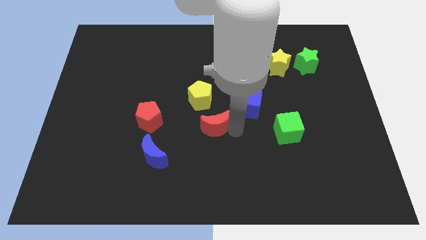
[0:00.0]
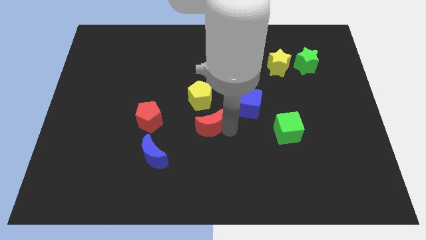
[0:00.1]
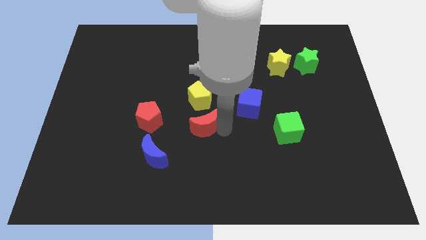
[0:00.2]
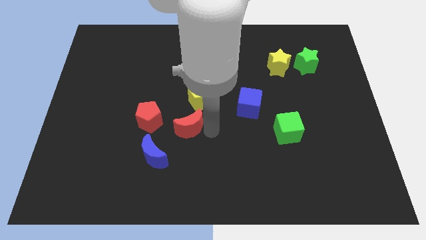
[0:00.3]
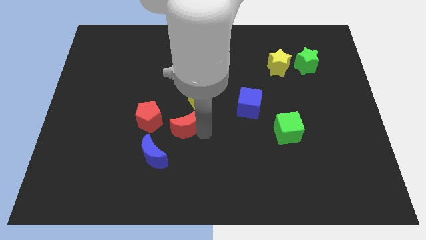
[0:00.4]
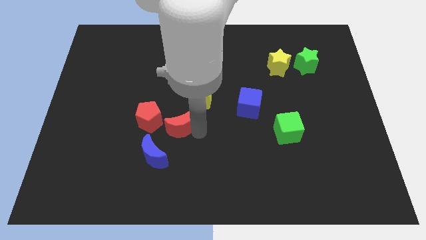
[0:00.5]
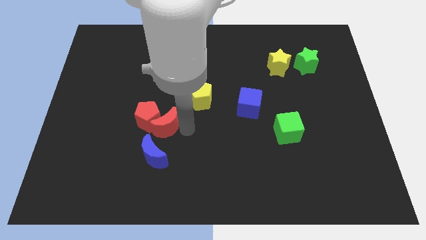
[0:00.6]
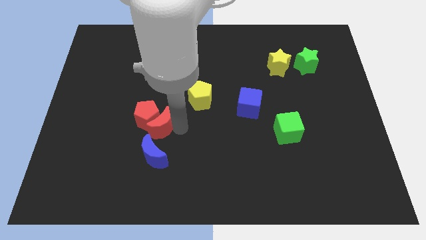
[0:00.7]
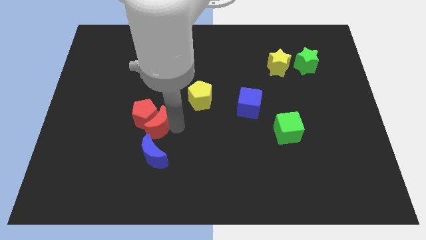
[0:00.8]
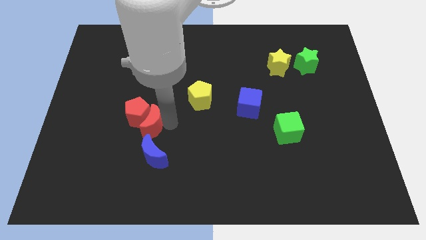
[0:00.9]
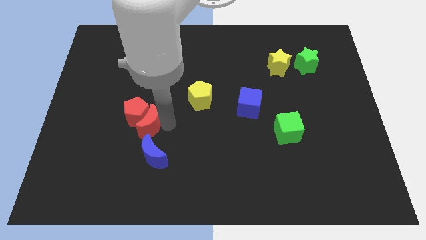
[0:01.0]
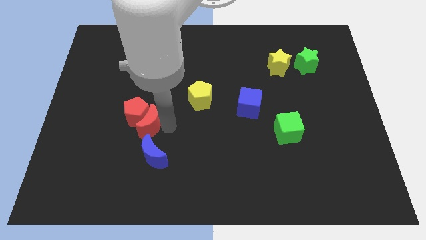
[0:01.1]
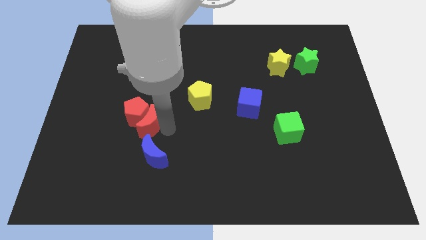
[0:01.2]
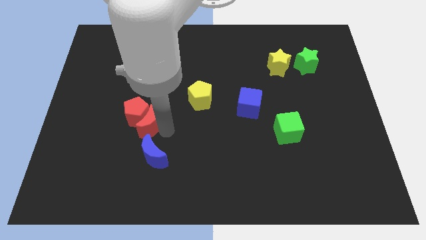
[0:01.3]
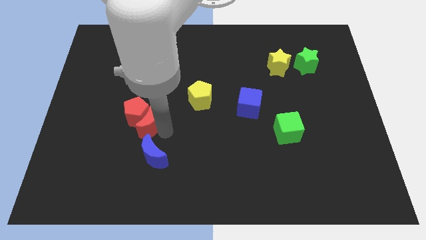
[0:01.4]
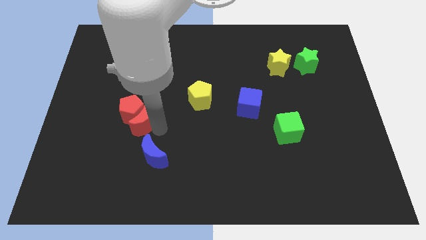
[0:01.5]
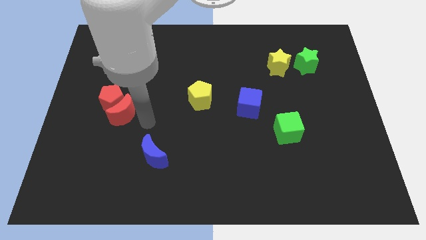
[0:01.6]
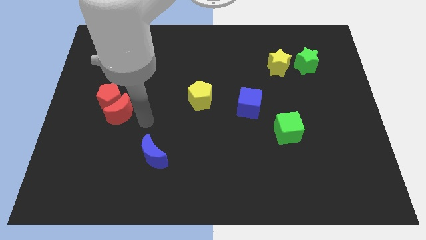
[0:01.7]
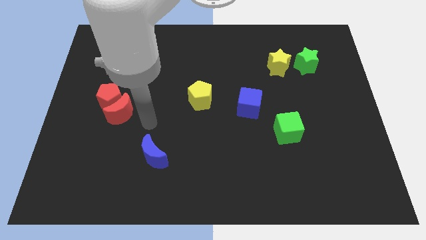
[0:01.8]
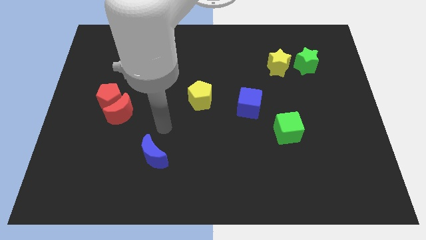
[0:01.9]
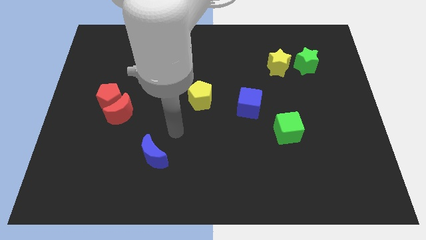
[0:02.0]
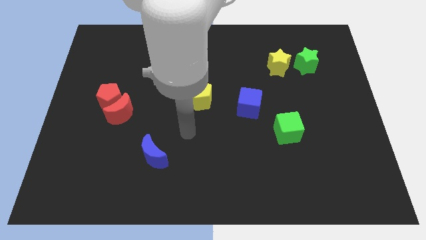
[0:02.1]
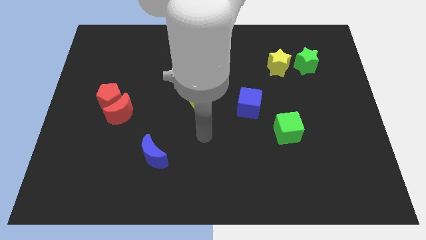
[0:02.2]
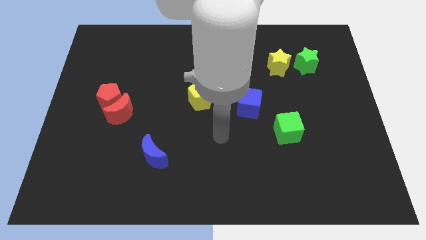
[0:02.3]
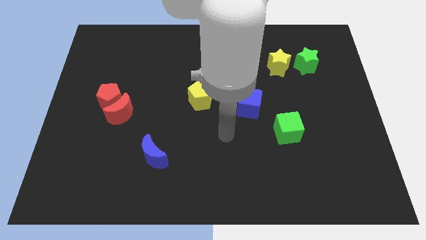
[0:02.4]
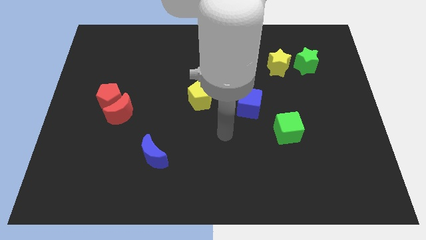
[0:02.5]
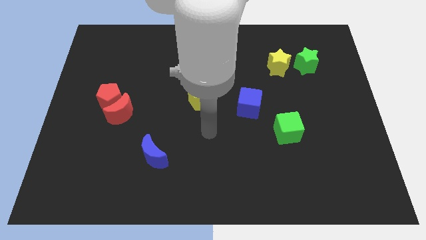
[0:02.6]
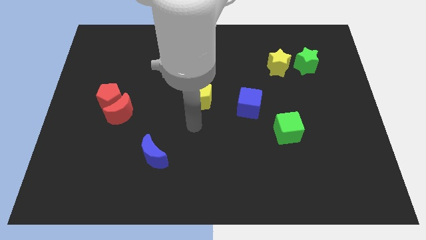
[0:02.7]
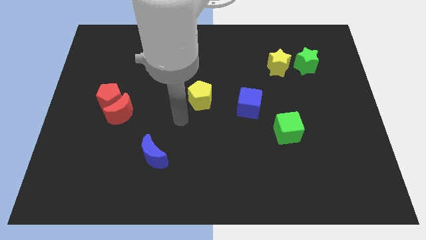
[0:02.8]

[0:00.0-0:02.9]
slide red moon and red pentagon to the left side of the board

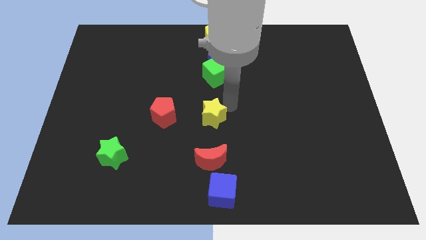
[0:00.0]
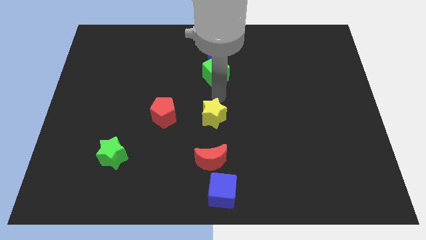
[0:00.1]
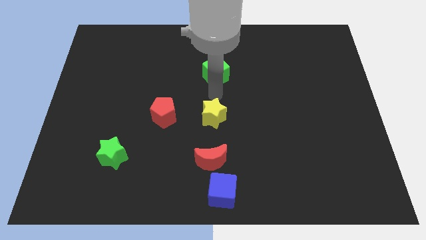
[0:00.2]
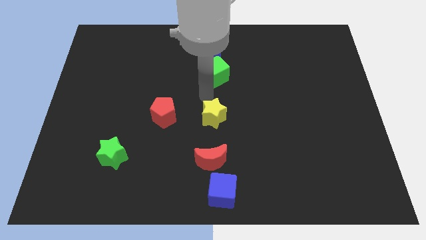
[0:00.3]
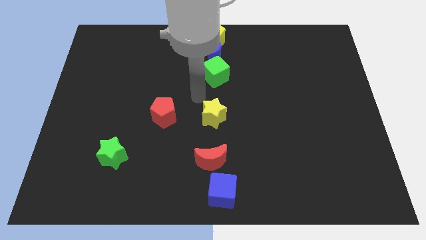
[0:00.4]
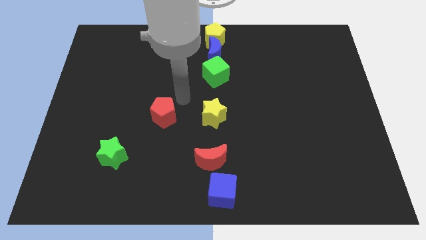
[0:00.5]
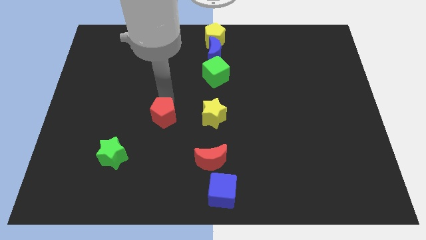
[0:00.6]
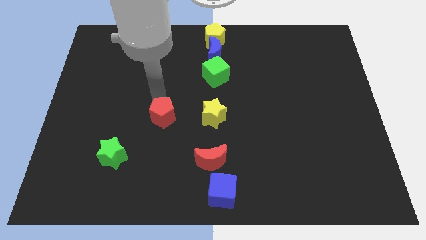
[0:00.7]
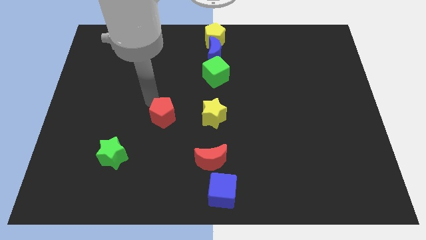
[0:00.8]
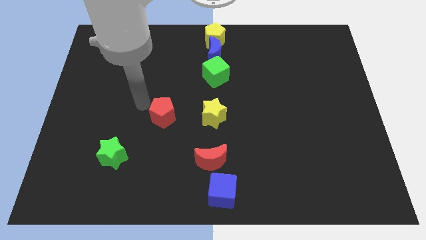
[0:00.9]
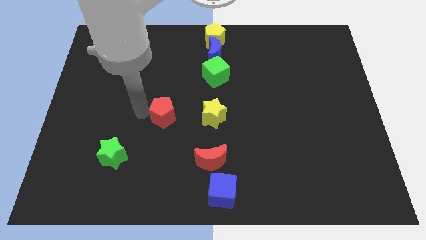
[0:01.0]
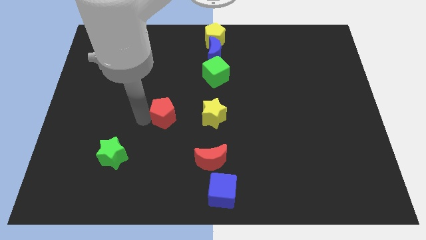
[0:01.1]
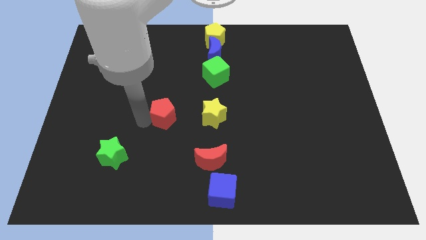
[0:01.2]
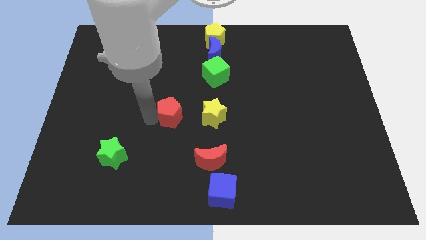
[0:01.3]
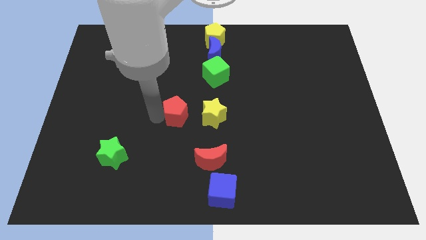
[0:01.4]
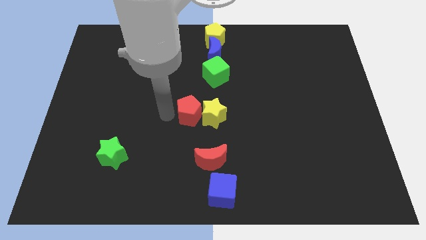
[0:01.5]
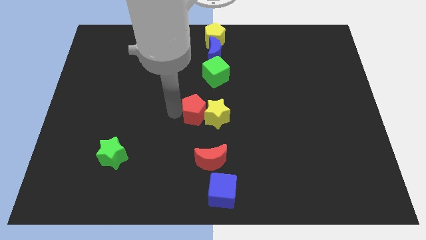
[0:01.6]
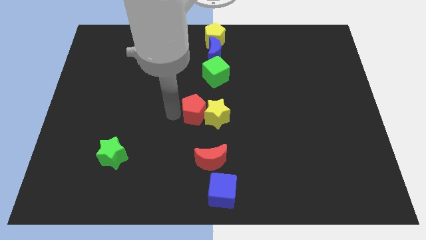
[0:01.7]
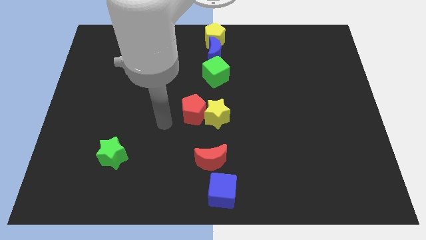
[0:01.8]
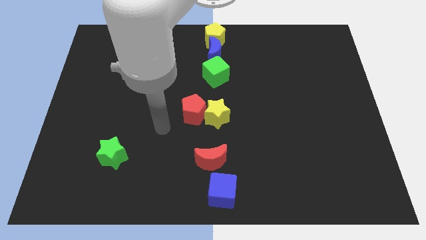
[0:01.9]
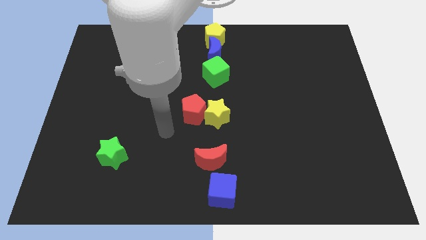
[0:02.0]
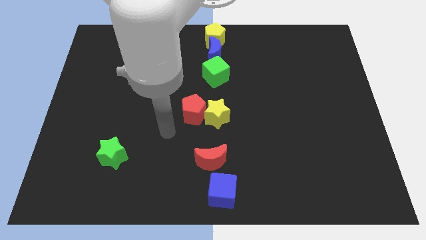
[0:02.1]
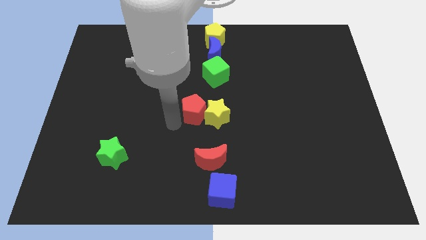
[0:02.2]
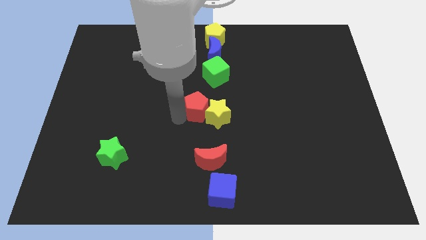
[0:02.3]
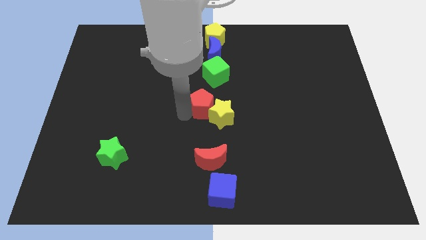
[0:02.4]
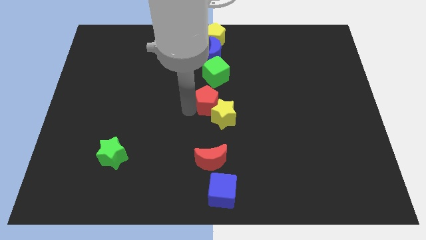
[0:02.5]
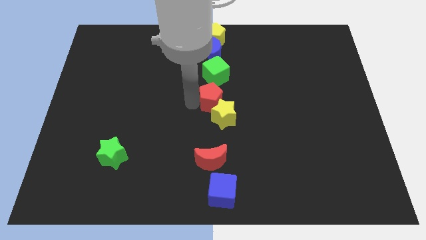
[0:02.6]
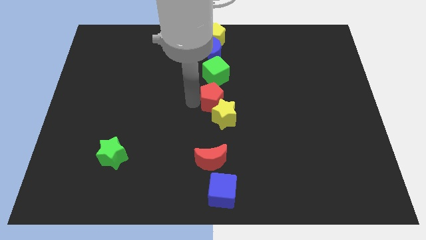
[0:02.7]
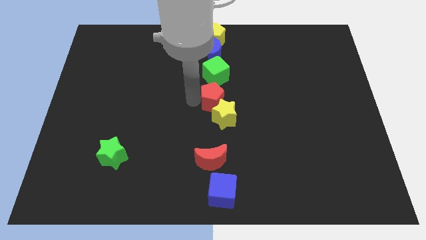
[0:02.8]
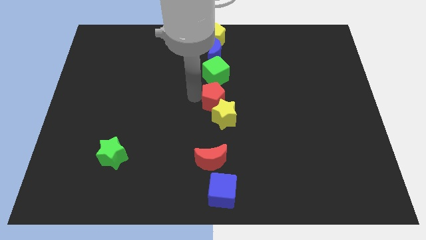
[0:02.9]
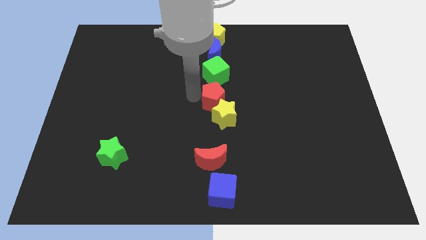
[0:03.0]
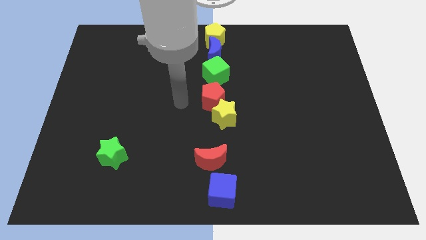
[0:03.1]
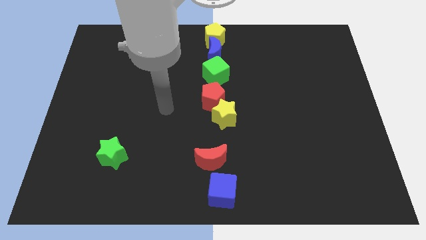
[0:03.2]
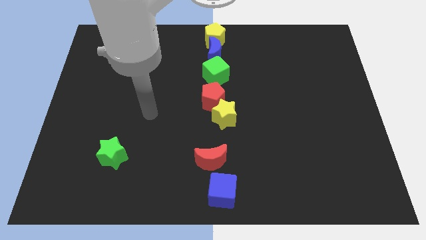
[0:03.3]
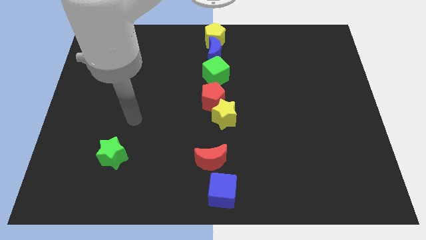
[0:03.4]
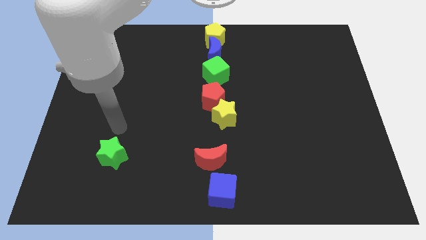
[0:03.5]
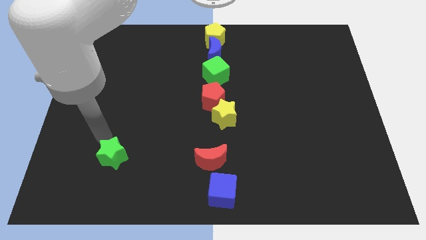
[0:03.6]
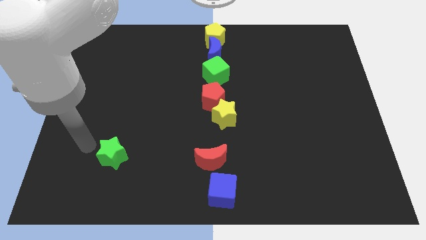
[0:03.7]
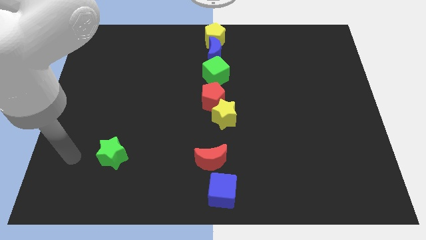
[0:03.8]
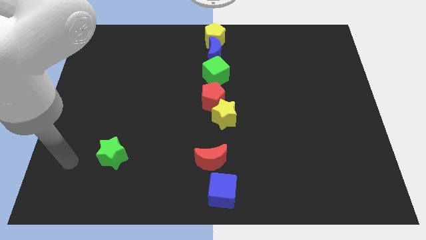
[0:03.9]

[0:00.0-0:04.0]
place the red pentagon to the bottom of the green cube

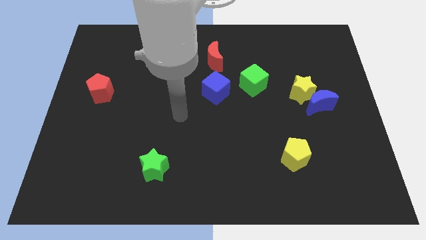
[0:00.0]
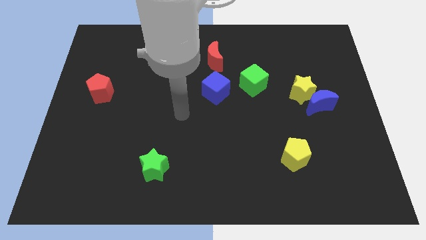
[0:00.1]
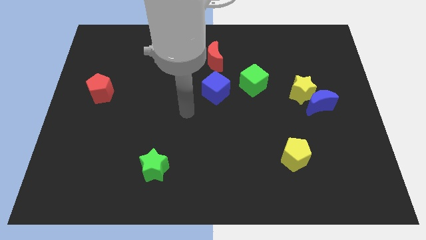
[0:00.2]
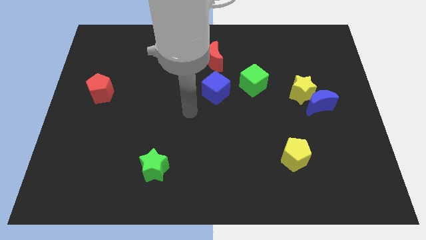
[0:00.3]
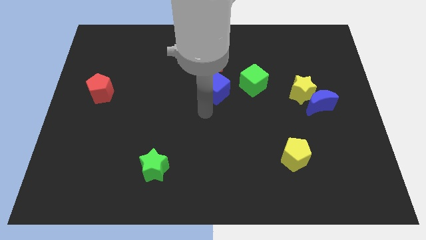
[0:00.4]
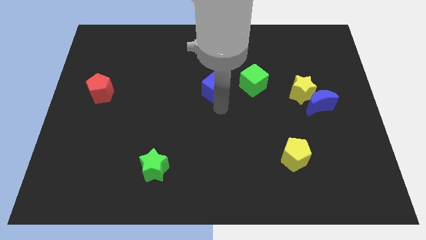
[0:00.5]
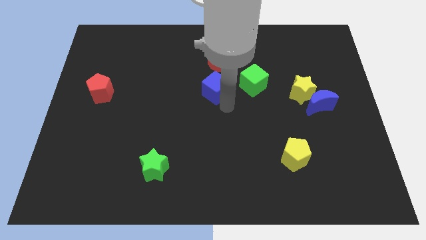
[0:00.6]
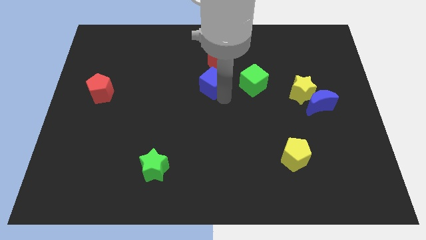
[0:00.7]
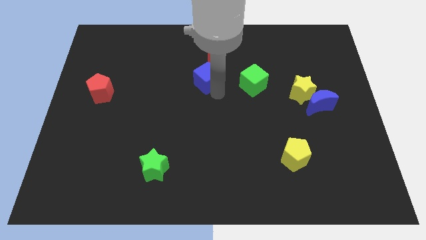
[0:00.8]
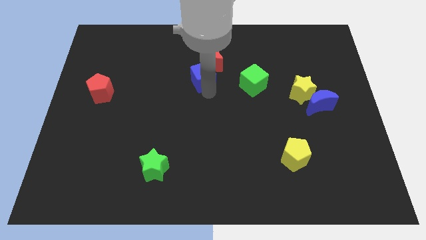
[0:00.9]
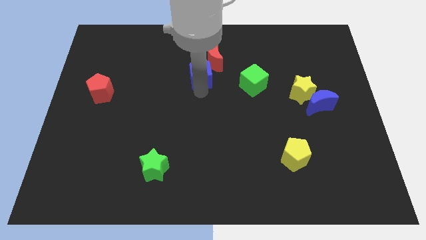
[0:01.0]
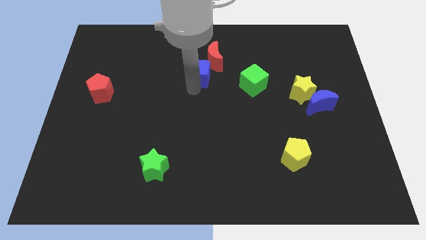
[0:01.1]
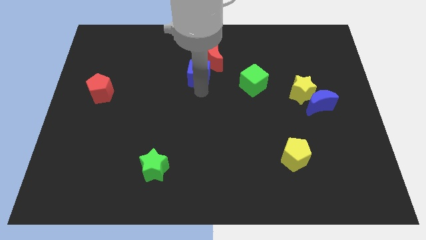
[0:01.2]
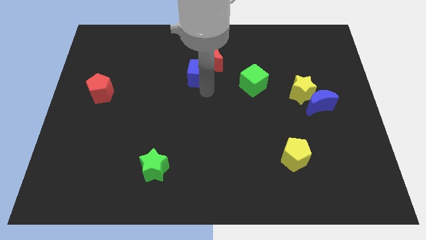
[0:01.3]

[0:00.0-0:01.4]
move blue cube left below the red moon

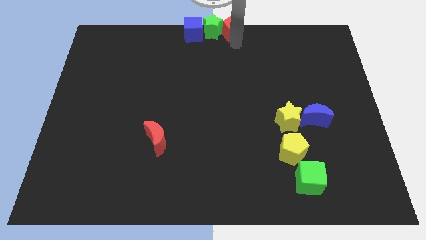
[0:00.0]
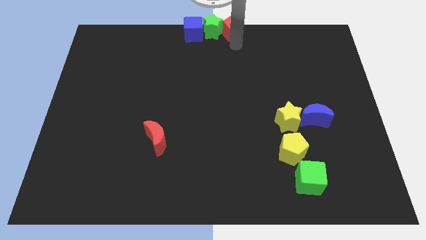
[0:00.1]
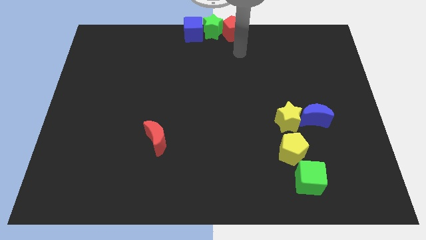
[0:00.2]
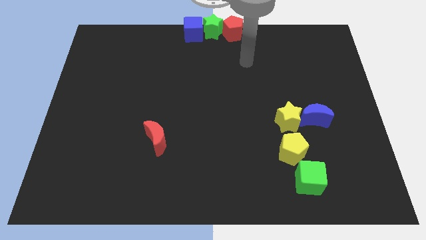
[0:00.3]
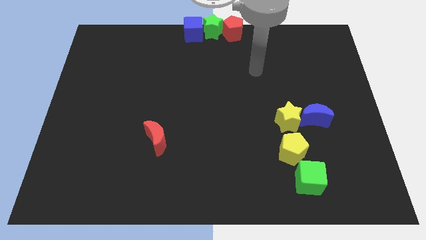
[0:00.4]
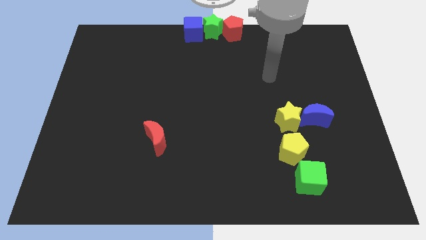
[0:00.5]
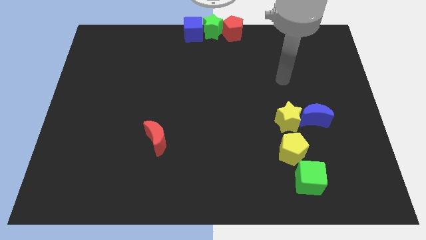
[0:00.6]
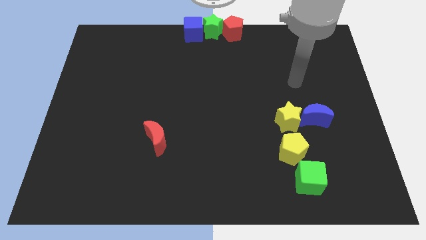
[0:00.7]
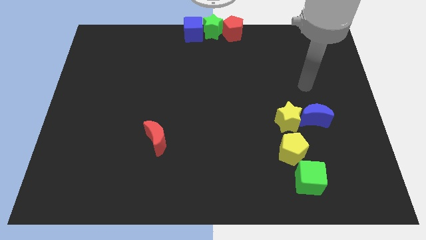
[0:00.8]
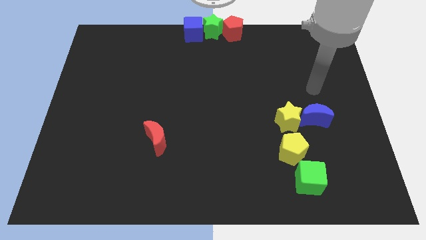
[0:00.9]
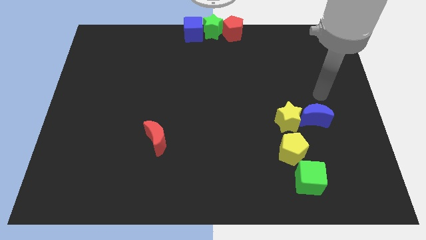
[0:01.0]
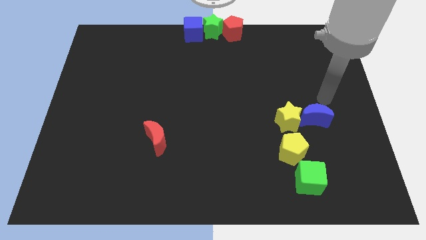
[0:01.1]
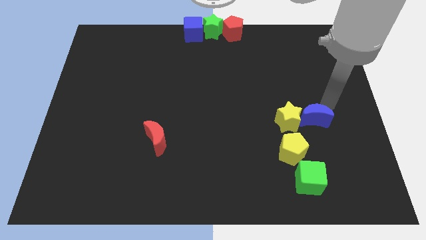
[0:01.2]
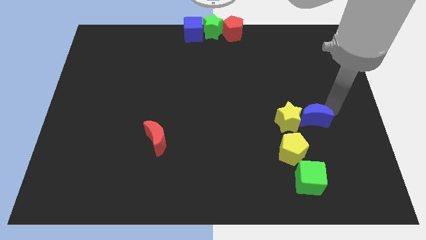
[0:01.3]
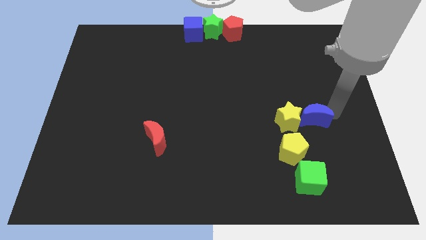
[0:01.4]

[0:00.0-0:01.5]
move your arm away from red pentagon
